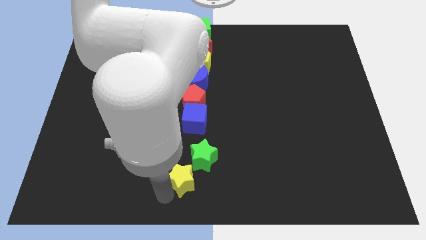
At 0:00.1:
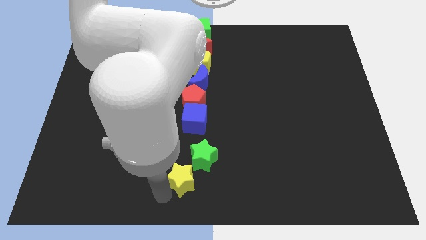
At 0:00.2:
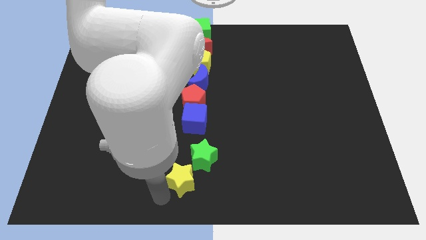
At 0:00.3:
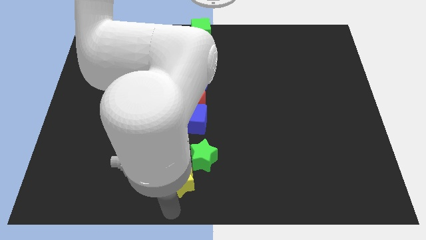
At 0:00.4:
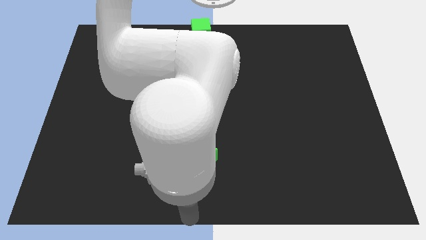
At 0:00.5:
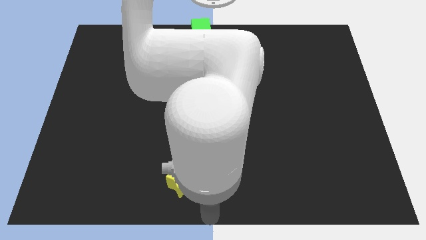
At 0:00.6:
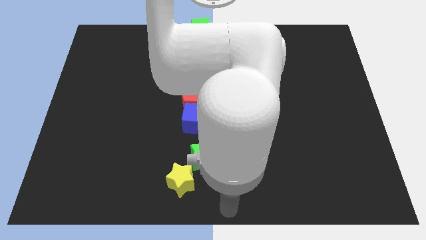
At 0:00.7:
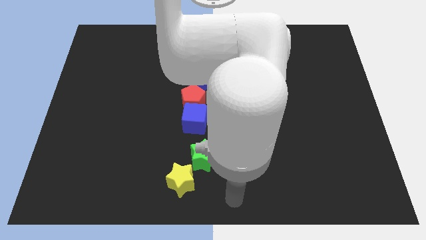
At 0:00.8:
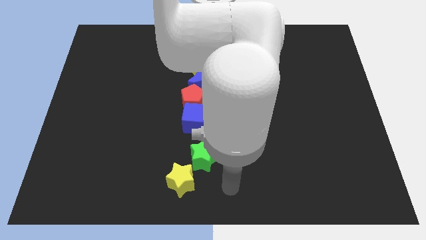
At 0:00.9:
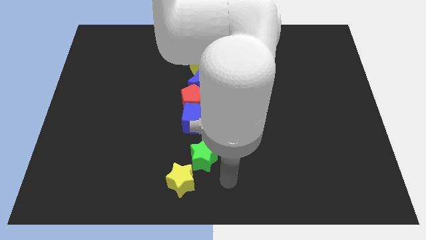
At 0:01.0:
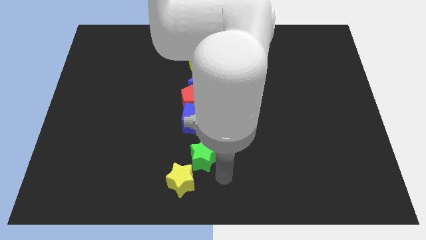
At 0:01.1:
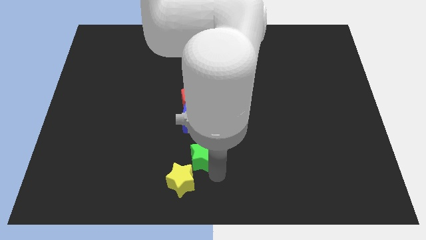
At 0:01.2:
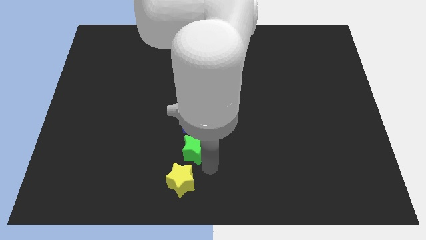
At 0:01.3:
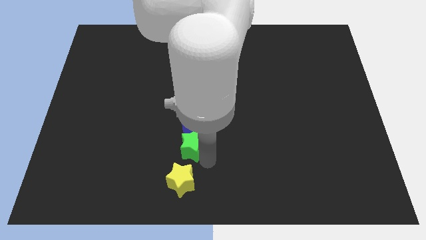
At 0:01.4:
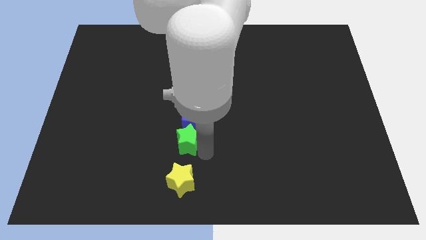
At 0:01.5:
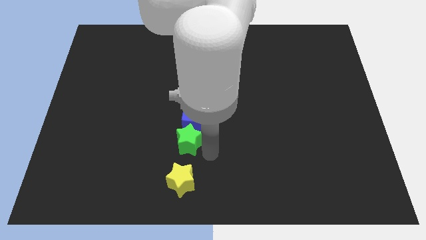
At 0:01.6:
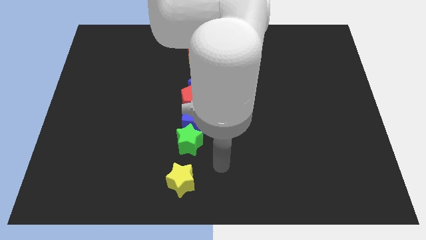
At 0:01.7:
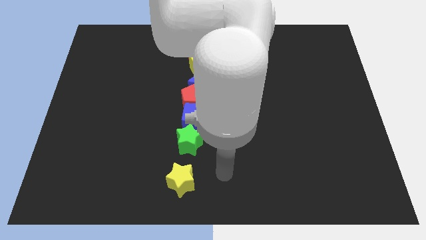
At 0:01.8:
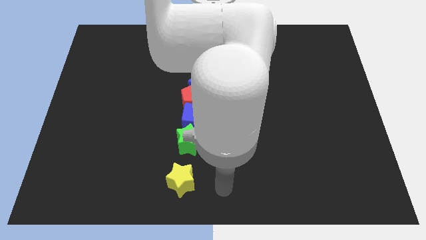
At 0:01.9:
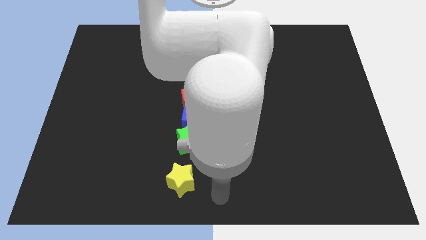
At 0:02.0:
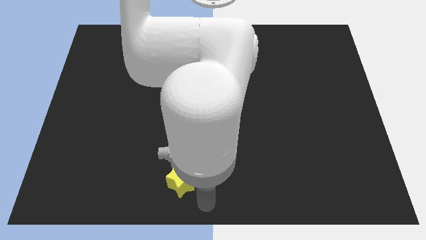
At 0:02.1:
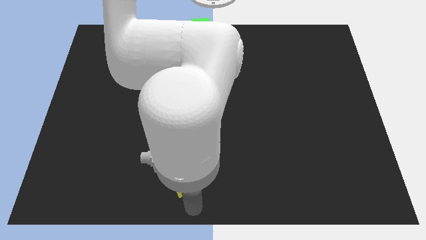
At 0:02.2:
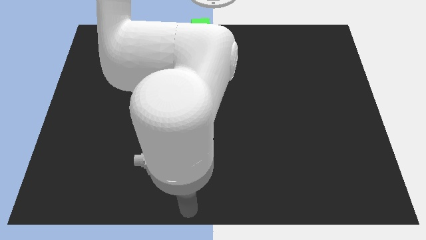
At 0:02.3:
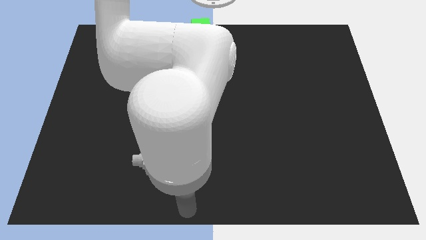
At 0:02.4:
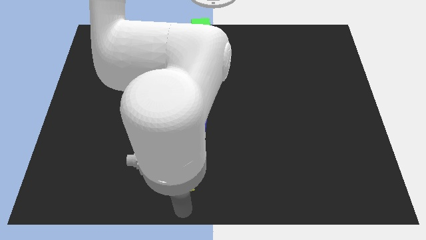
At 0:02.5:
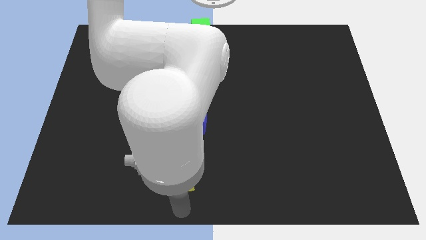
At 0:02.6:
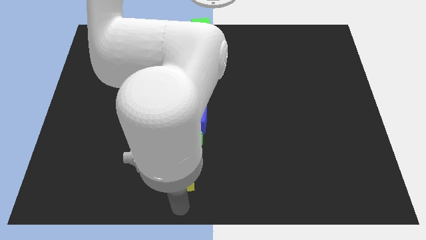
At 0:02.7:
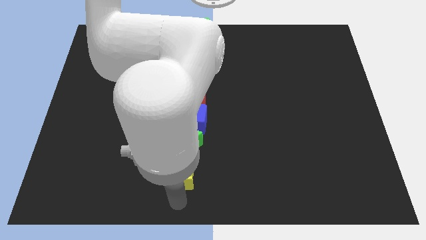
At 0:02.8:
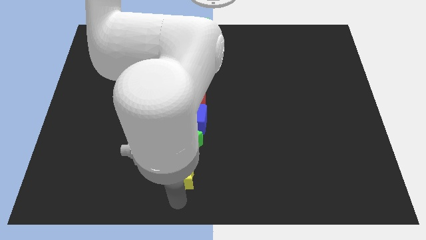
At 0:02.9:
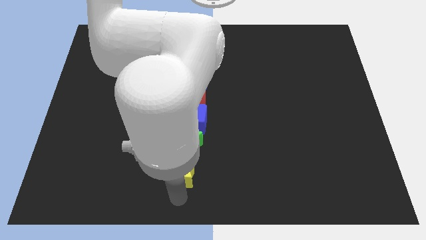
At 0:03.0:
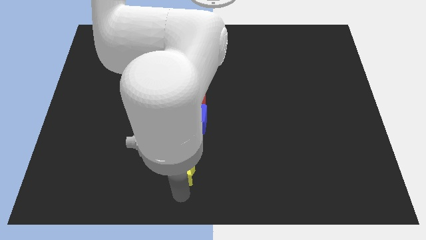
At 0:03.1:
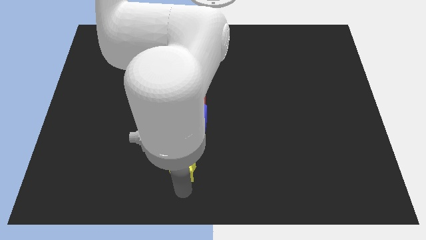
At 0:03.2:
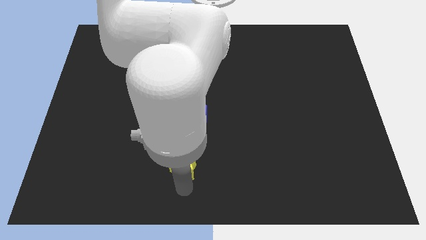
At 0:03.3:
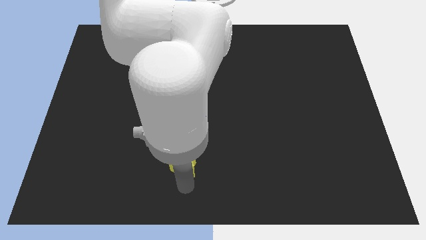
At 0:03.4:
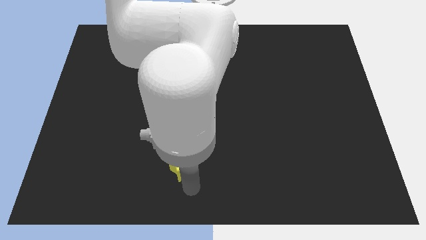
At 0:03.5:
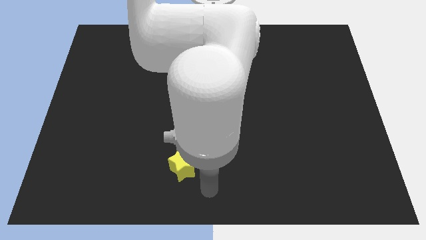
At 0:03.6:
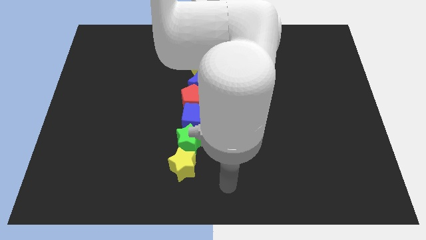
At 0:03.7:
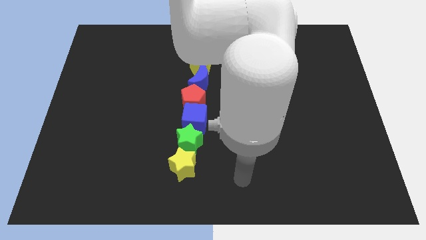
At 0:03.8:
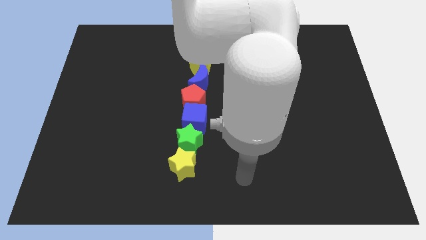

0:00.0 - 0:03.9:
place the green and yellow stars in a vertical line of blocks below the blue cube

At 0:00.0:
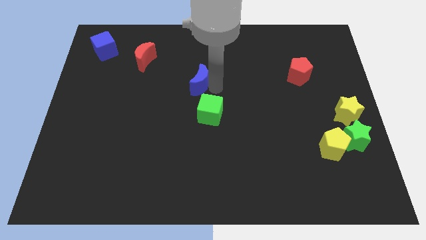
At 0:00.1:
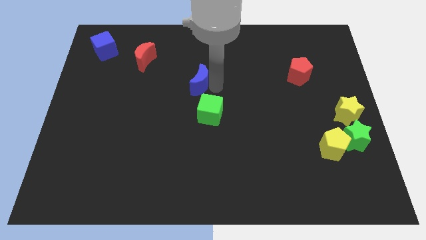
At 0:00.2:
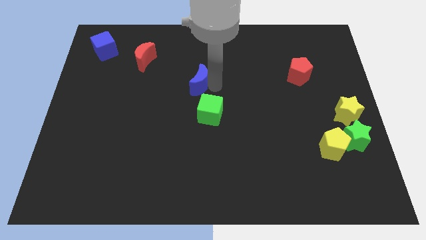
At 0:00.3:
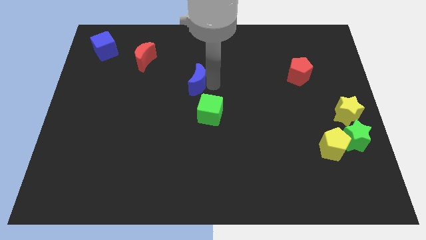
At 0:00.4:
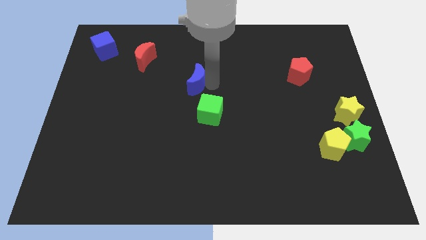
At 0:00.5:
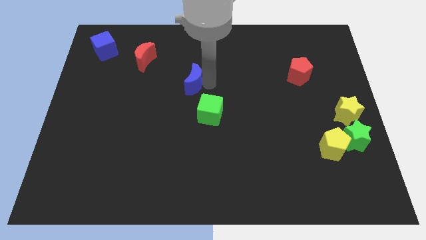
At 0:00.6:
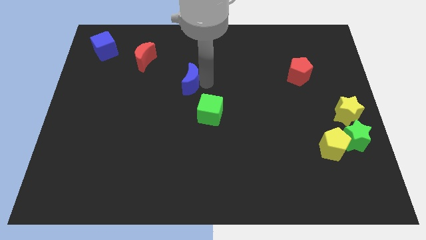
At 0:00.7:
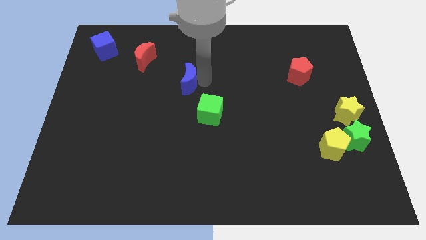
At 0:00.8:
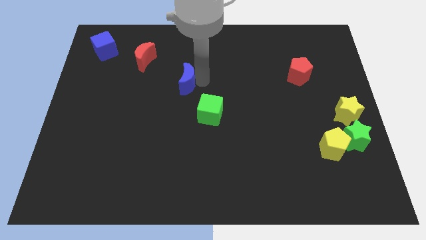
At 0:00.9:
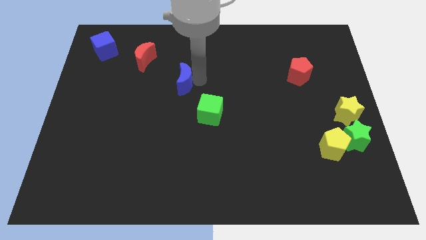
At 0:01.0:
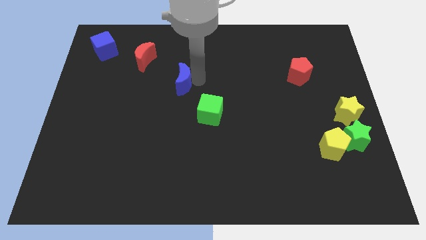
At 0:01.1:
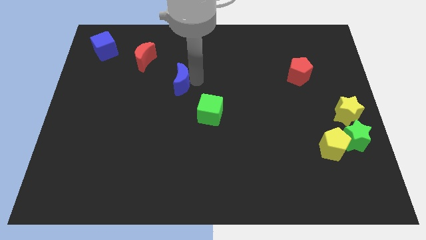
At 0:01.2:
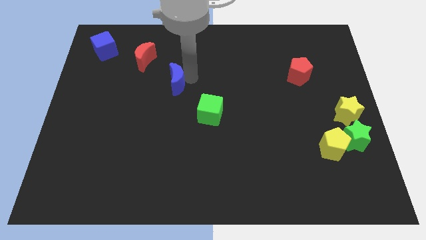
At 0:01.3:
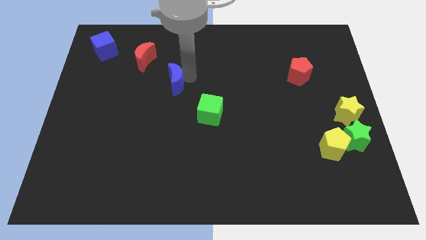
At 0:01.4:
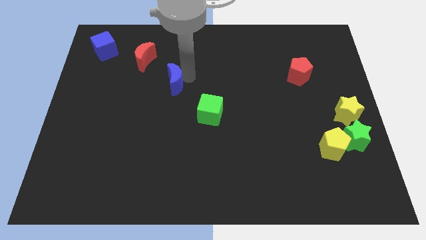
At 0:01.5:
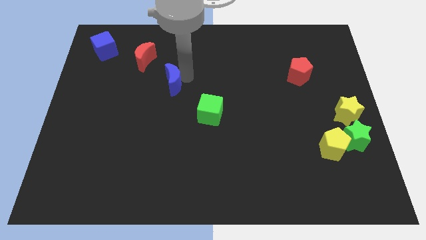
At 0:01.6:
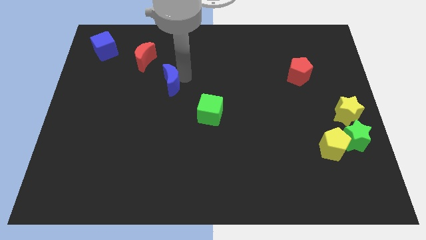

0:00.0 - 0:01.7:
place the blue moon between the red moon and green cube

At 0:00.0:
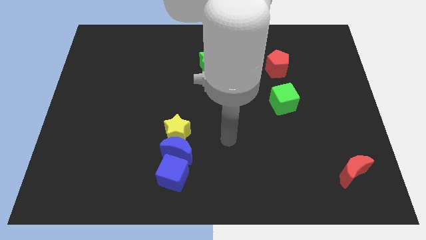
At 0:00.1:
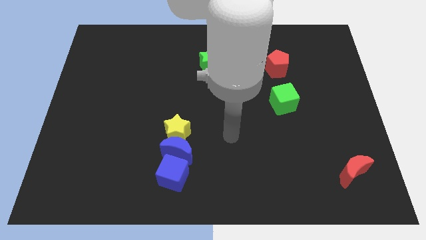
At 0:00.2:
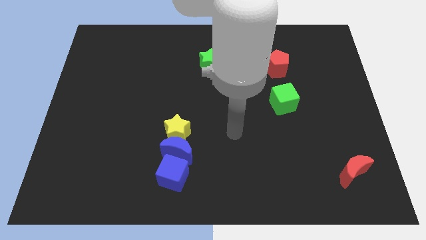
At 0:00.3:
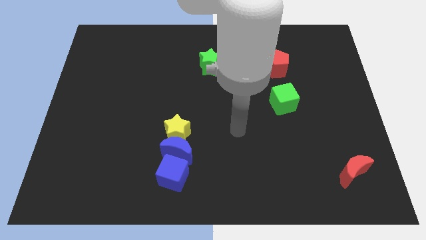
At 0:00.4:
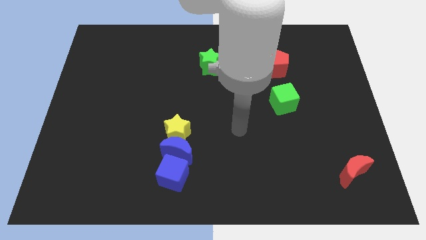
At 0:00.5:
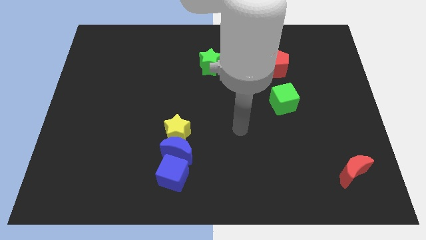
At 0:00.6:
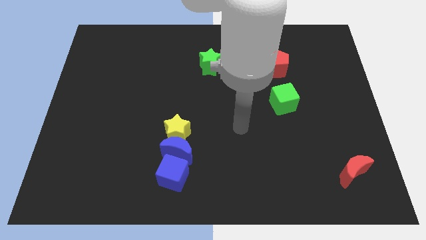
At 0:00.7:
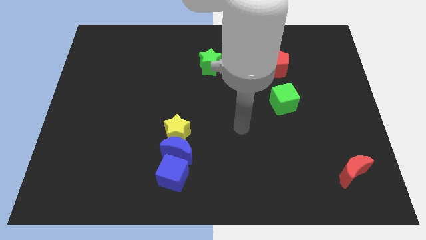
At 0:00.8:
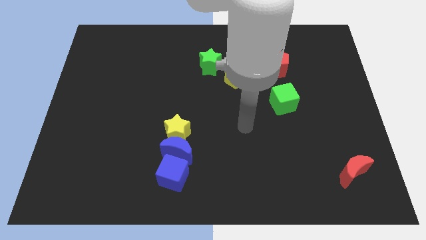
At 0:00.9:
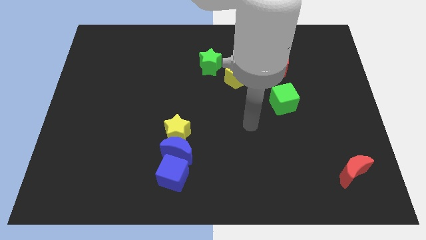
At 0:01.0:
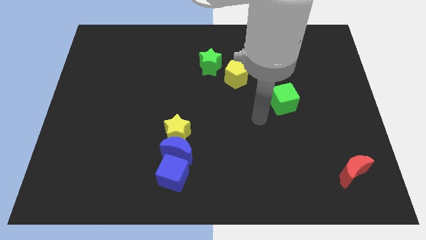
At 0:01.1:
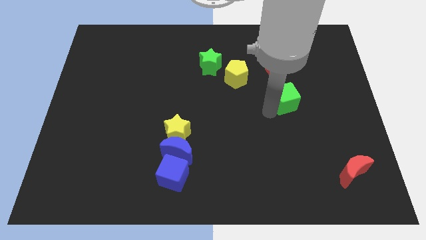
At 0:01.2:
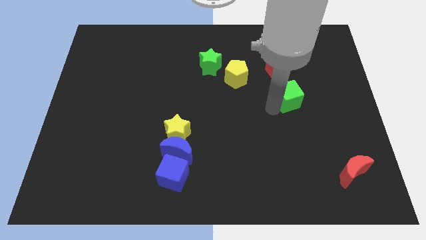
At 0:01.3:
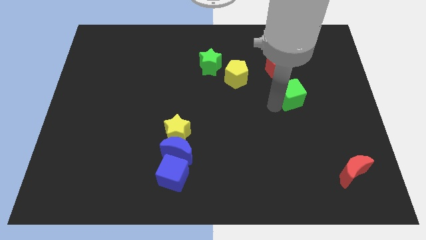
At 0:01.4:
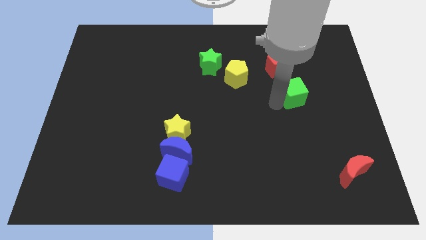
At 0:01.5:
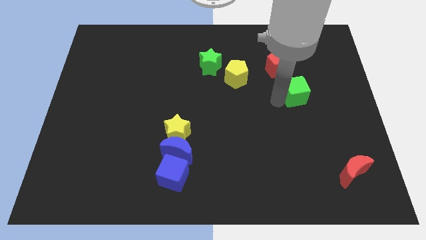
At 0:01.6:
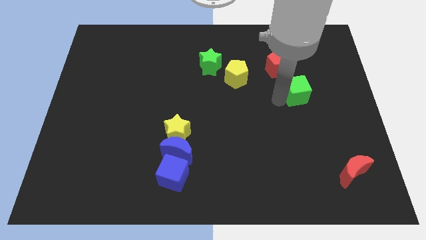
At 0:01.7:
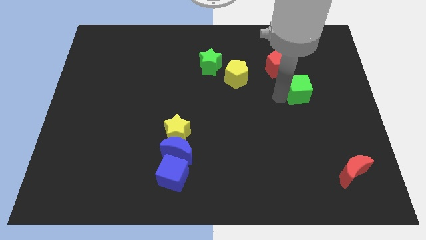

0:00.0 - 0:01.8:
push the green cube to the right side of the board

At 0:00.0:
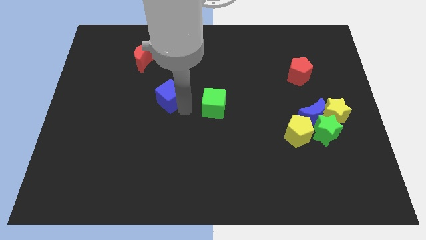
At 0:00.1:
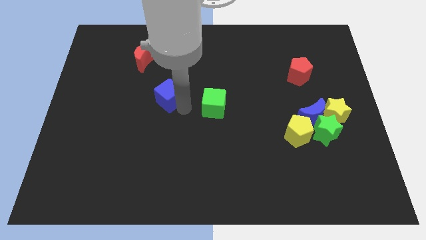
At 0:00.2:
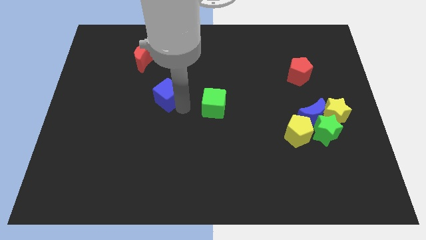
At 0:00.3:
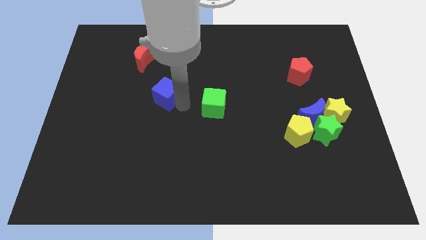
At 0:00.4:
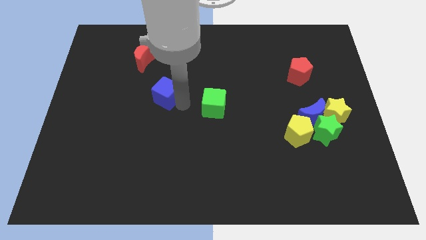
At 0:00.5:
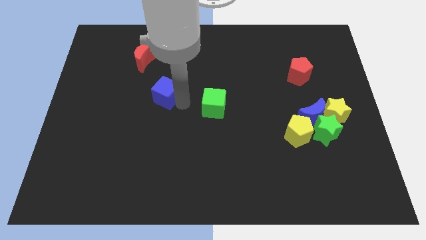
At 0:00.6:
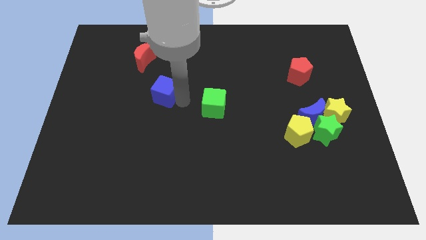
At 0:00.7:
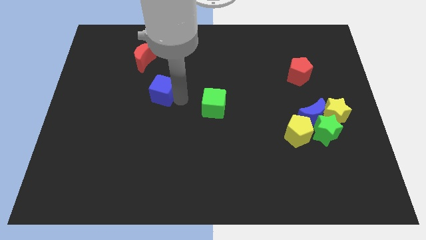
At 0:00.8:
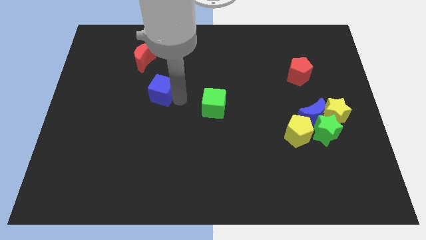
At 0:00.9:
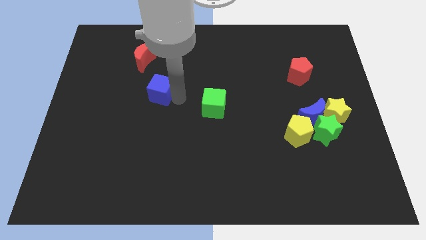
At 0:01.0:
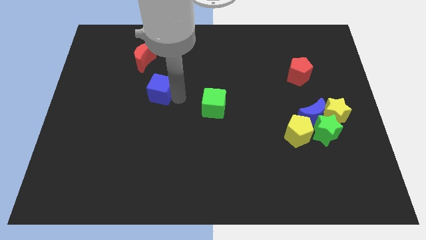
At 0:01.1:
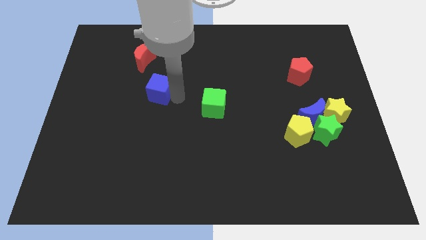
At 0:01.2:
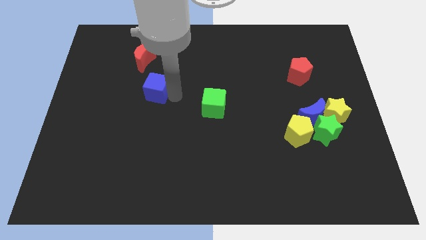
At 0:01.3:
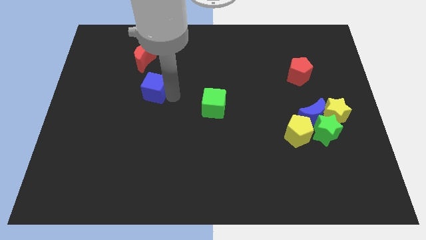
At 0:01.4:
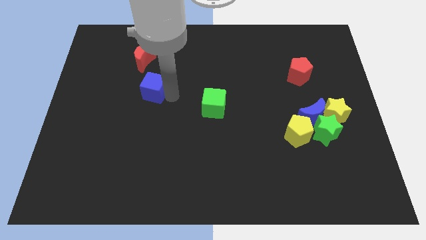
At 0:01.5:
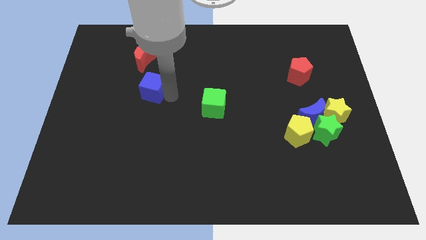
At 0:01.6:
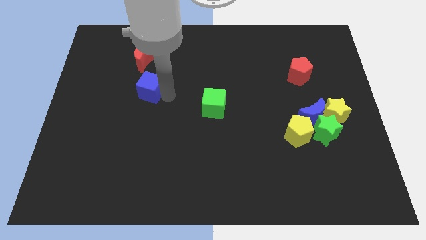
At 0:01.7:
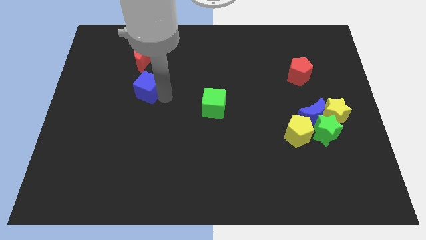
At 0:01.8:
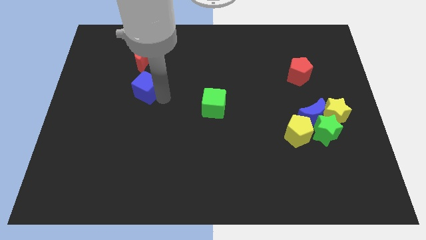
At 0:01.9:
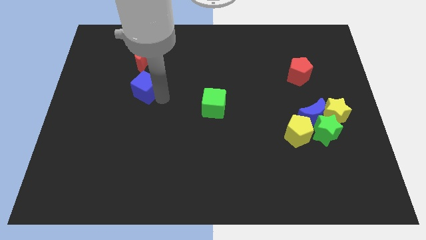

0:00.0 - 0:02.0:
put the blue cube below the red moon
